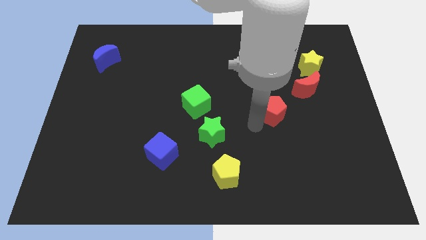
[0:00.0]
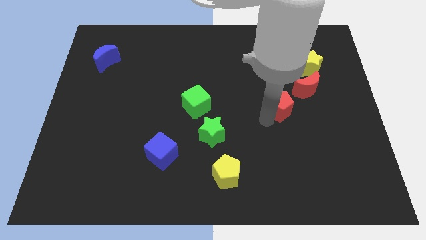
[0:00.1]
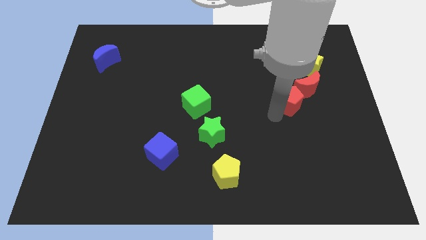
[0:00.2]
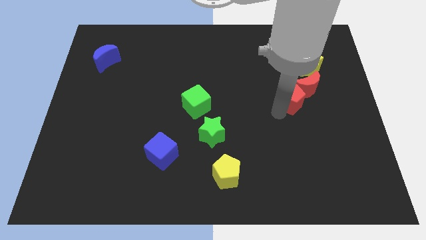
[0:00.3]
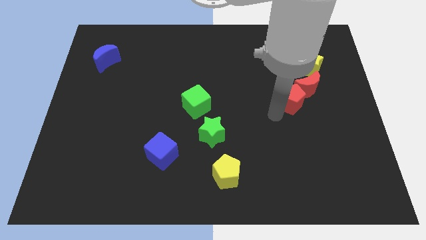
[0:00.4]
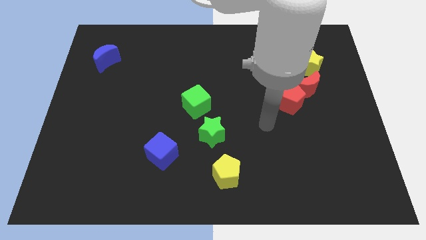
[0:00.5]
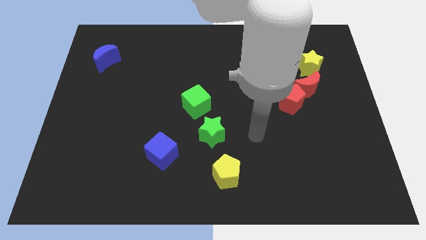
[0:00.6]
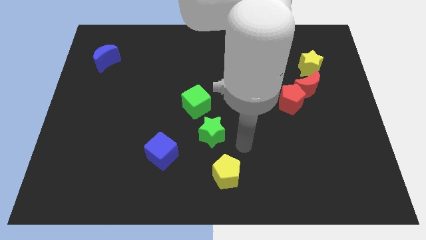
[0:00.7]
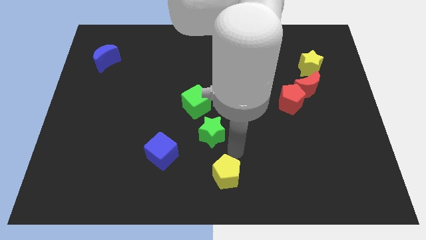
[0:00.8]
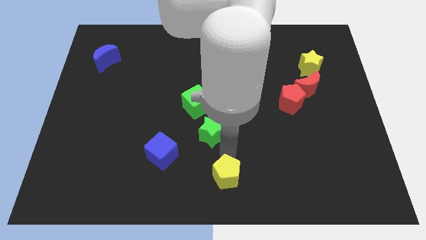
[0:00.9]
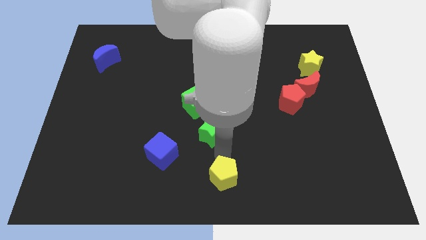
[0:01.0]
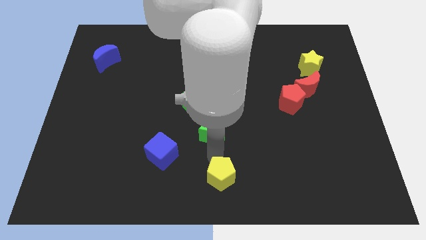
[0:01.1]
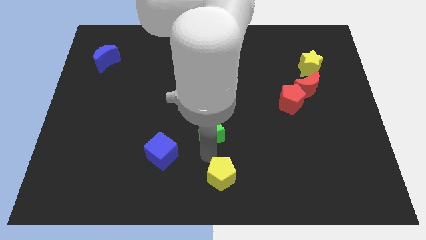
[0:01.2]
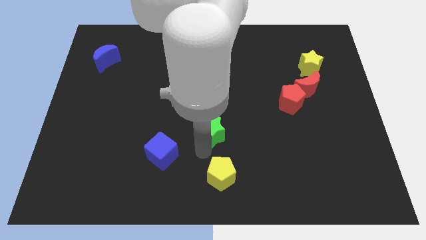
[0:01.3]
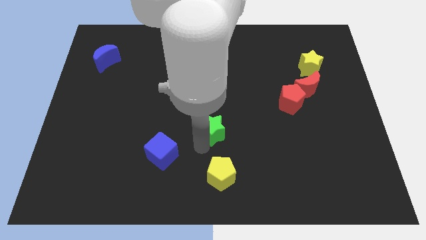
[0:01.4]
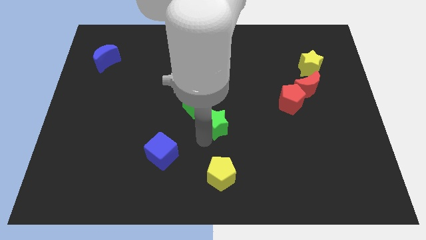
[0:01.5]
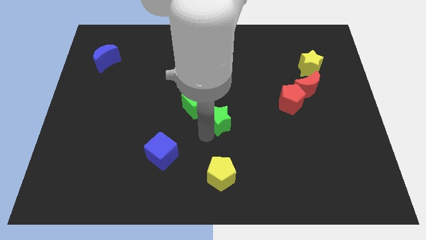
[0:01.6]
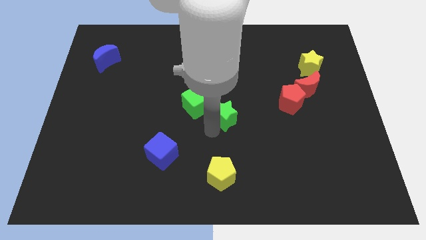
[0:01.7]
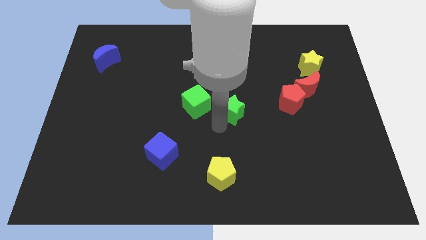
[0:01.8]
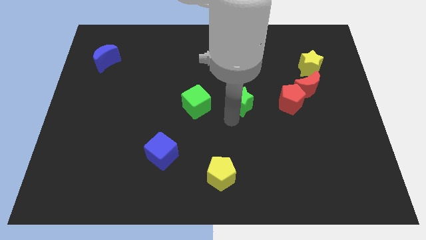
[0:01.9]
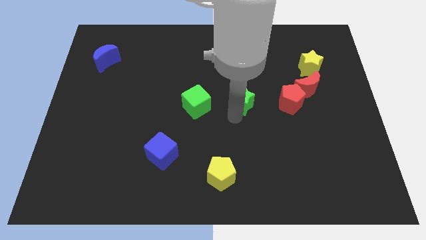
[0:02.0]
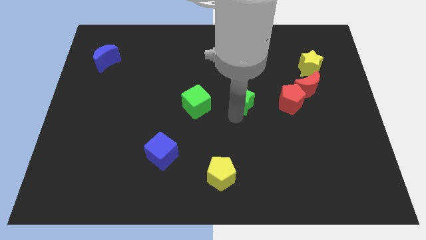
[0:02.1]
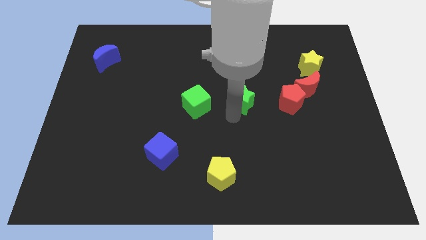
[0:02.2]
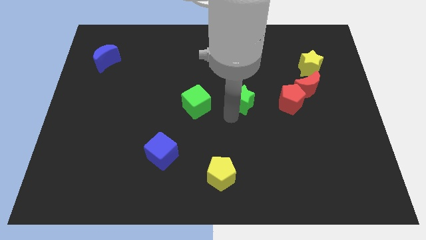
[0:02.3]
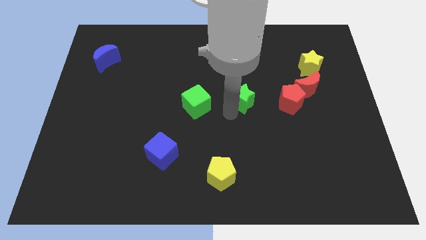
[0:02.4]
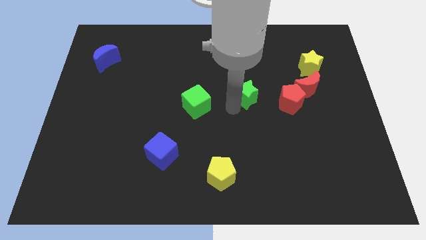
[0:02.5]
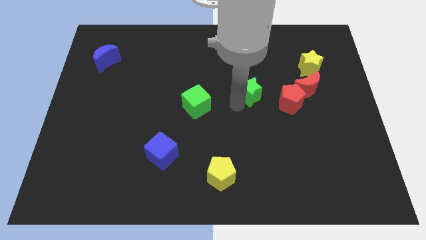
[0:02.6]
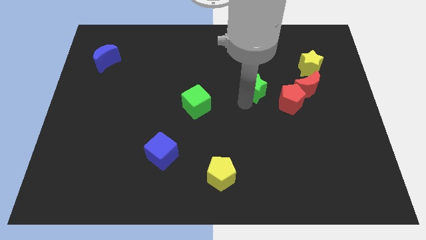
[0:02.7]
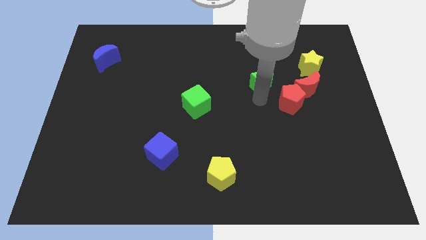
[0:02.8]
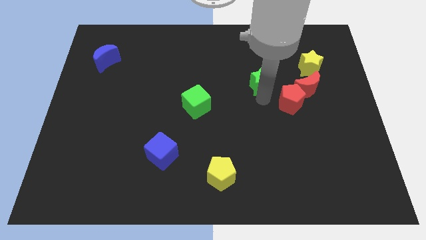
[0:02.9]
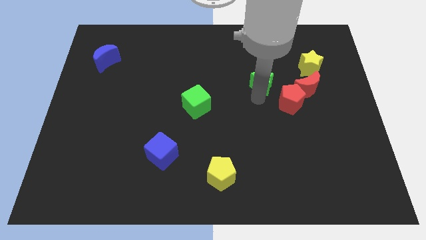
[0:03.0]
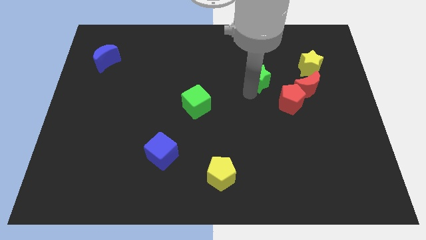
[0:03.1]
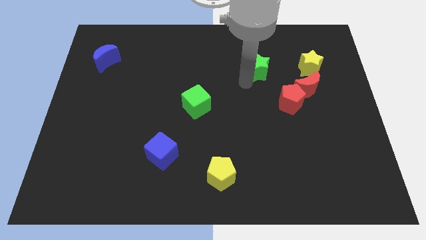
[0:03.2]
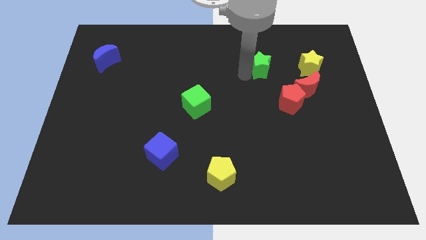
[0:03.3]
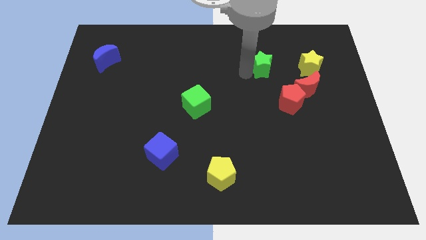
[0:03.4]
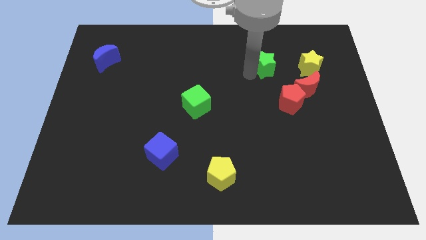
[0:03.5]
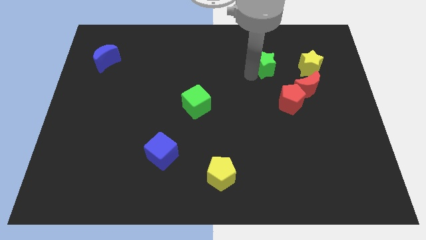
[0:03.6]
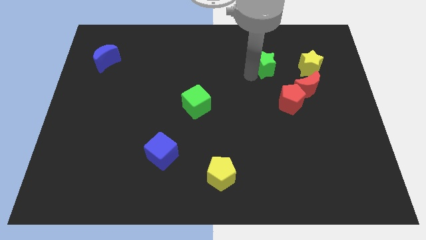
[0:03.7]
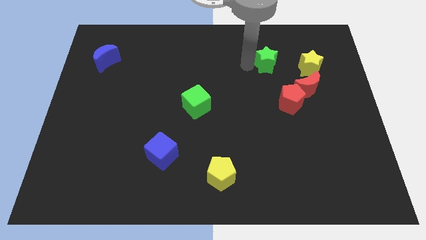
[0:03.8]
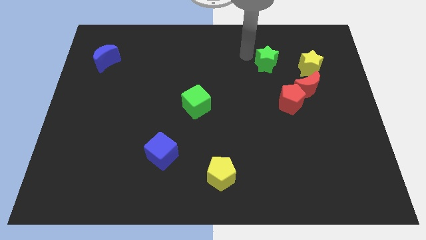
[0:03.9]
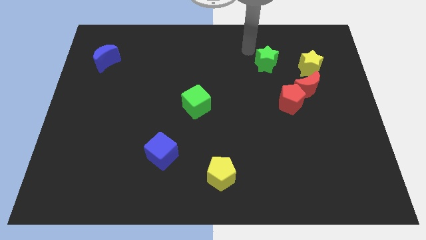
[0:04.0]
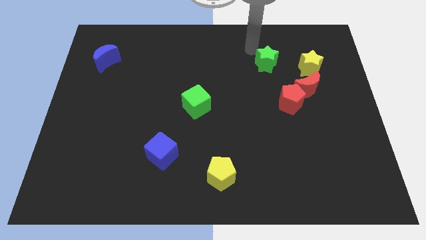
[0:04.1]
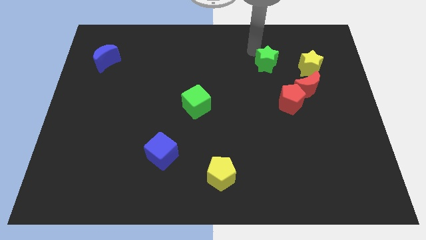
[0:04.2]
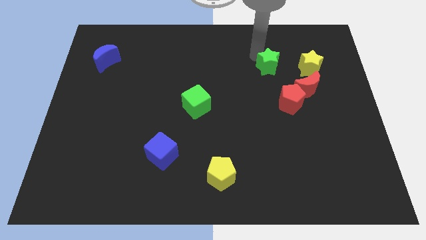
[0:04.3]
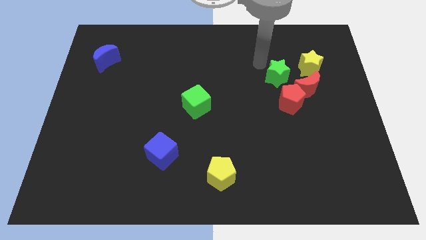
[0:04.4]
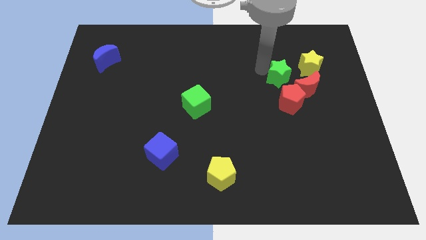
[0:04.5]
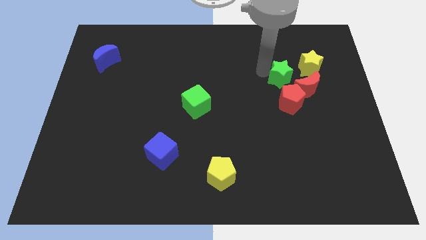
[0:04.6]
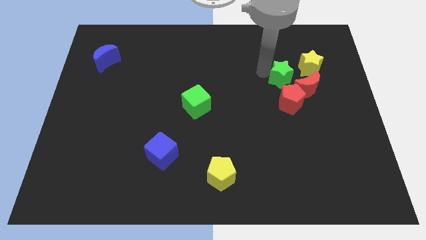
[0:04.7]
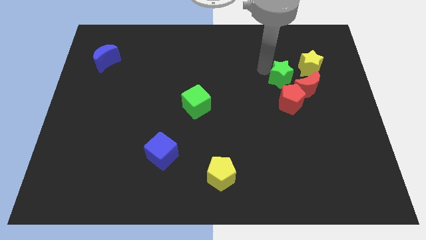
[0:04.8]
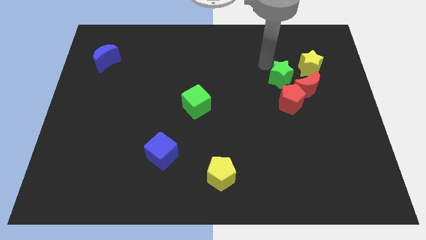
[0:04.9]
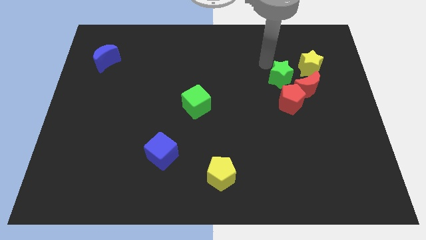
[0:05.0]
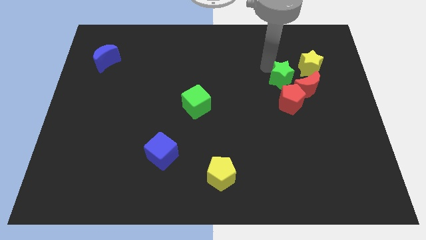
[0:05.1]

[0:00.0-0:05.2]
slide the green star diagonally to the yellow star

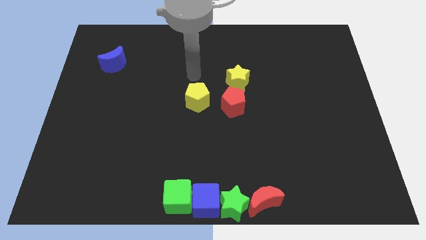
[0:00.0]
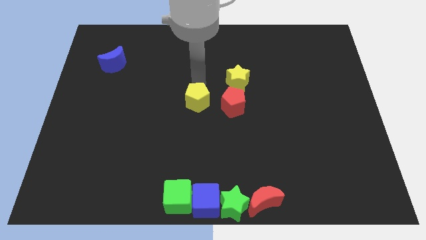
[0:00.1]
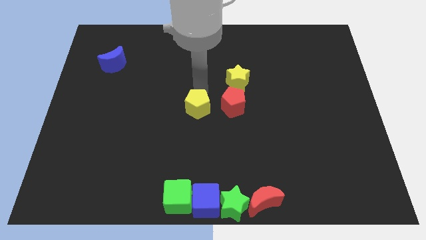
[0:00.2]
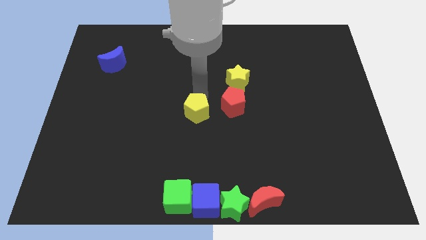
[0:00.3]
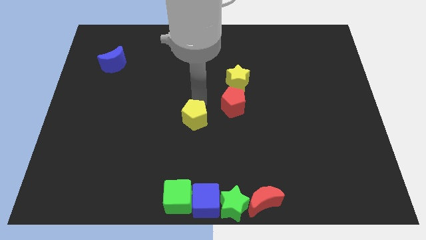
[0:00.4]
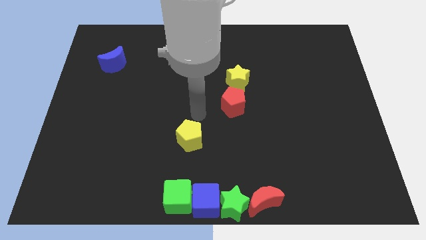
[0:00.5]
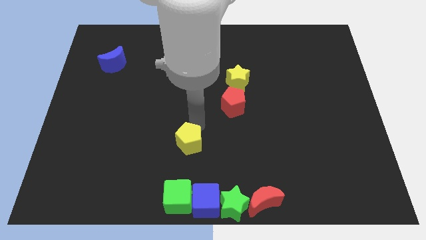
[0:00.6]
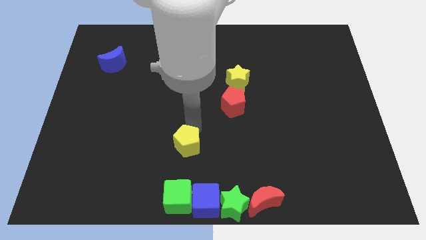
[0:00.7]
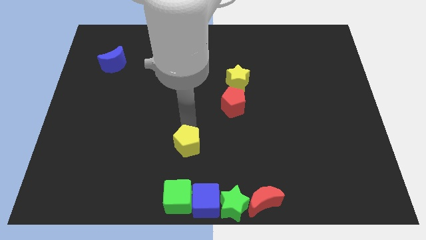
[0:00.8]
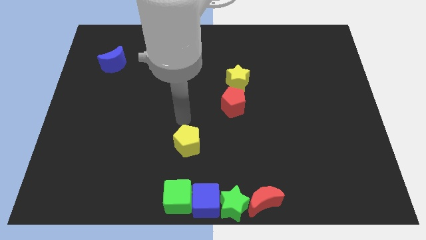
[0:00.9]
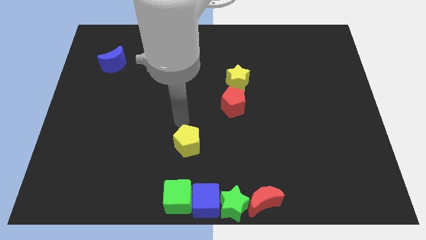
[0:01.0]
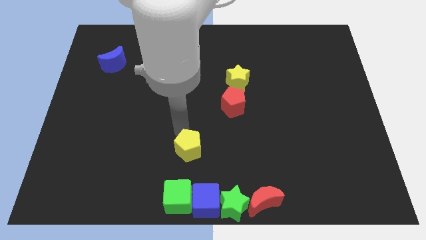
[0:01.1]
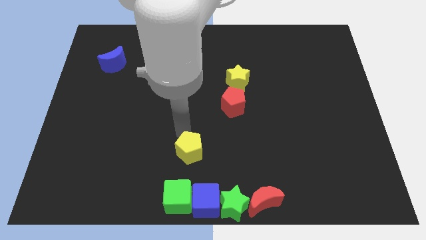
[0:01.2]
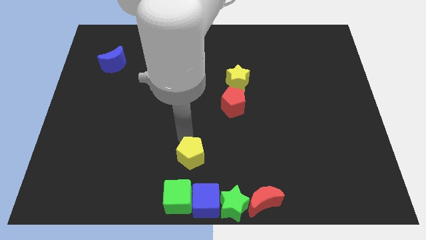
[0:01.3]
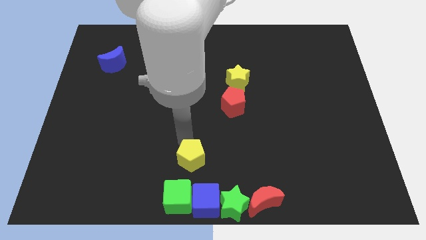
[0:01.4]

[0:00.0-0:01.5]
slide the yellow pentagon towards the green cube

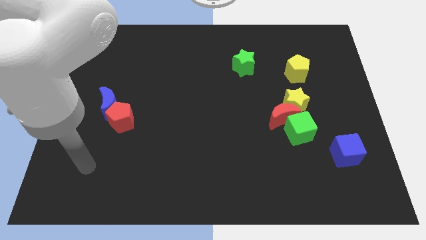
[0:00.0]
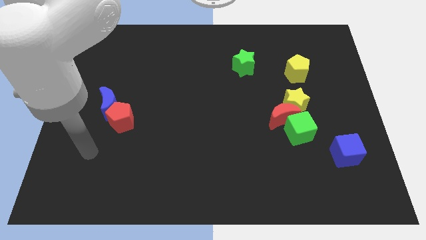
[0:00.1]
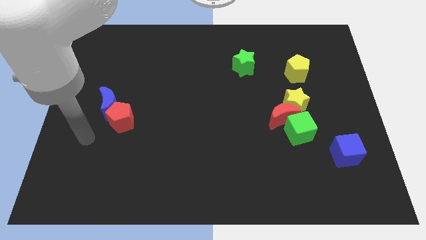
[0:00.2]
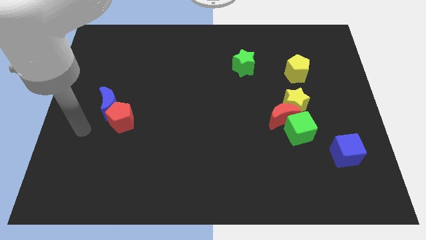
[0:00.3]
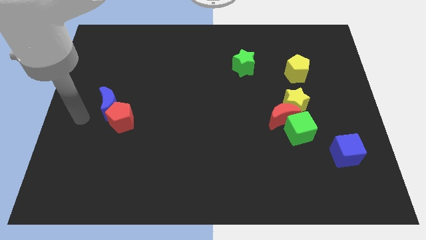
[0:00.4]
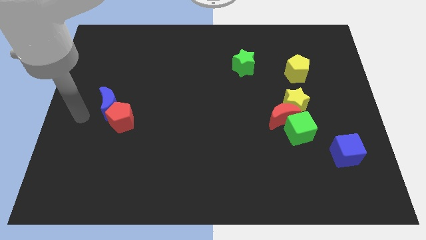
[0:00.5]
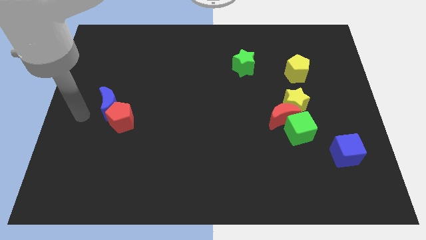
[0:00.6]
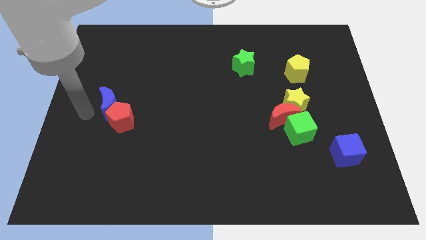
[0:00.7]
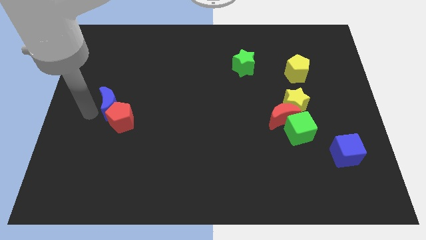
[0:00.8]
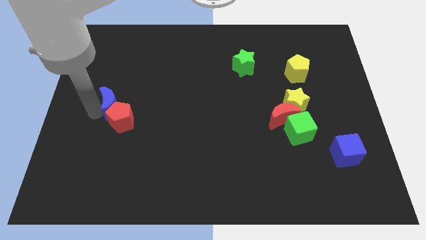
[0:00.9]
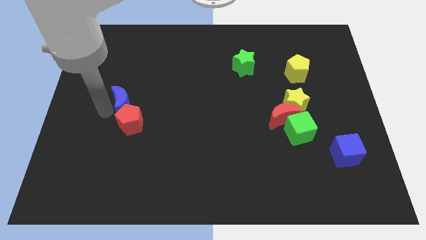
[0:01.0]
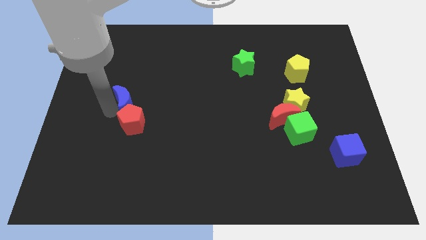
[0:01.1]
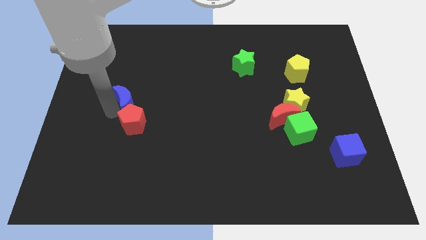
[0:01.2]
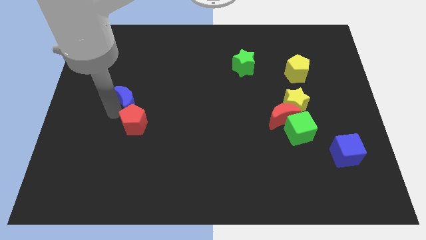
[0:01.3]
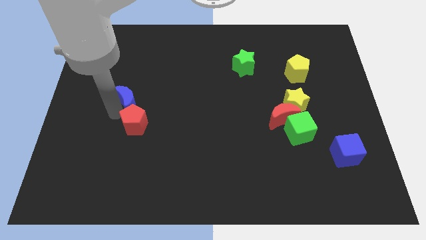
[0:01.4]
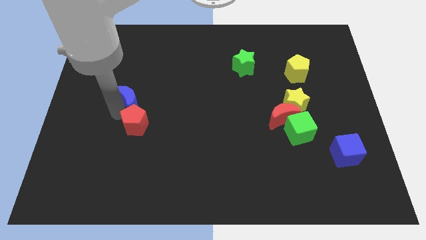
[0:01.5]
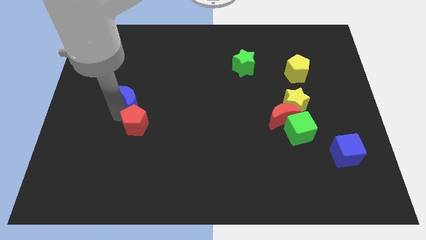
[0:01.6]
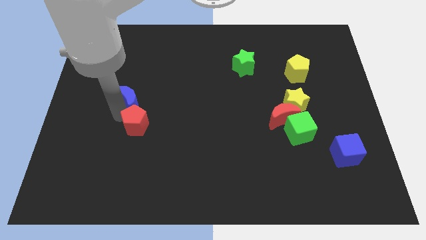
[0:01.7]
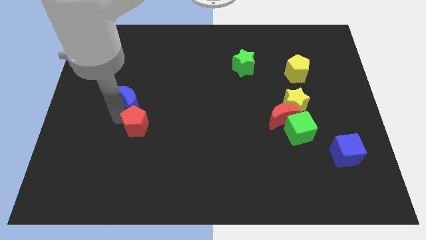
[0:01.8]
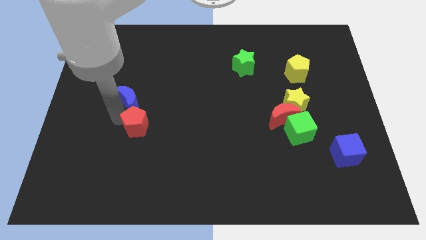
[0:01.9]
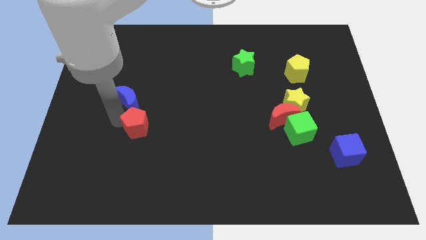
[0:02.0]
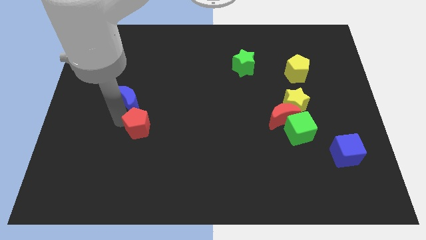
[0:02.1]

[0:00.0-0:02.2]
push blue crescent into red pentagon

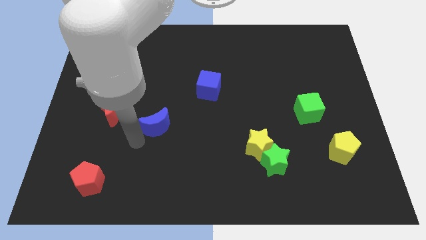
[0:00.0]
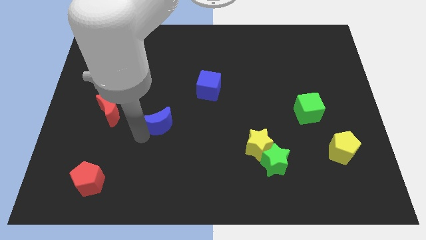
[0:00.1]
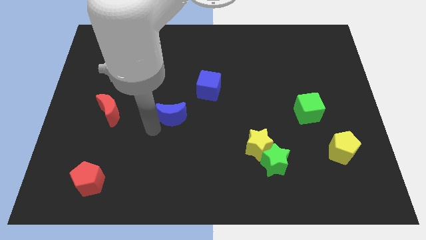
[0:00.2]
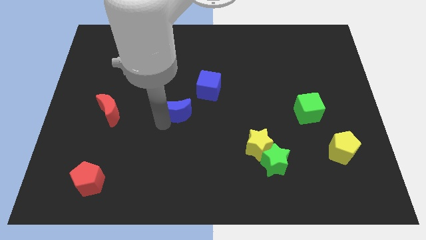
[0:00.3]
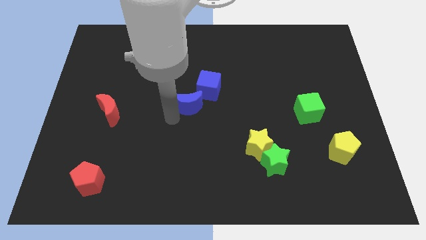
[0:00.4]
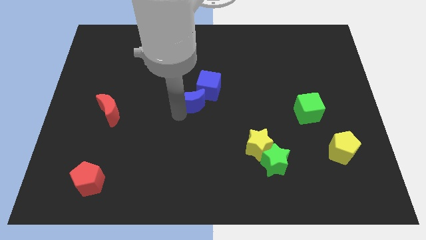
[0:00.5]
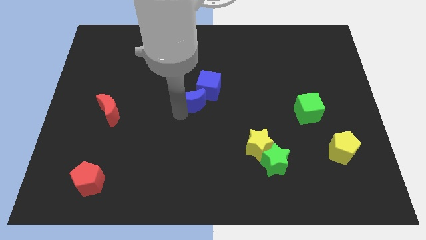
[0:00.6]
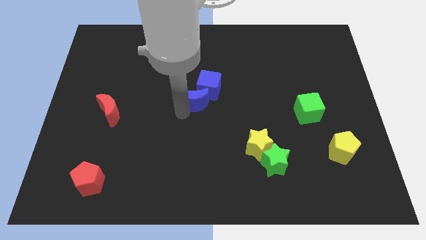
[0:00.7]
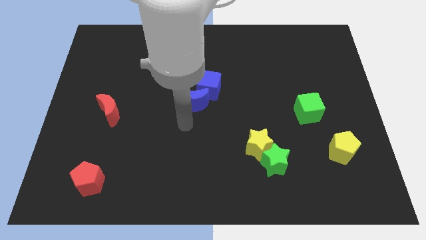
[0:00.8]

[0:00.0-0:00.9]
place blue crescent below blue cube
